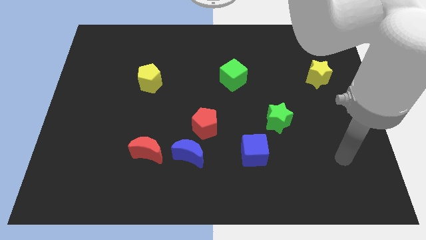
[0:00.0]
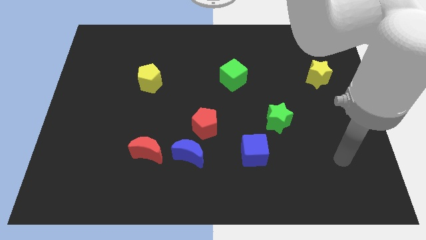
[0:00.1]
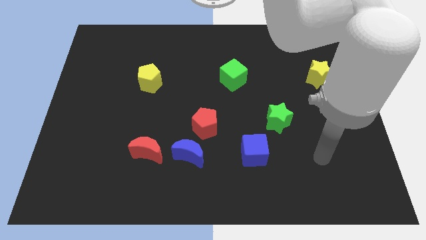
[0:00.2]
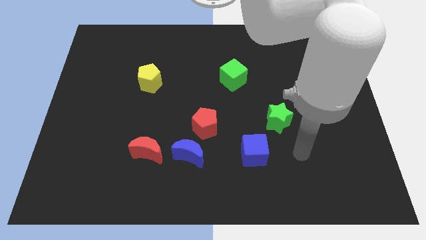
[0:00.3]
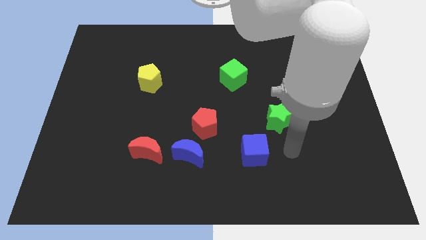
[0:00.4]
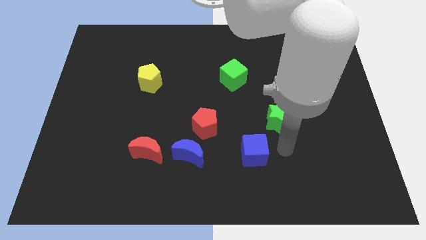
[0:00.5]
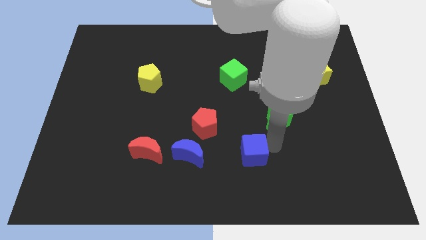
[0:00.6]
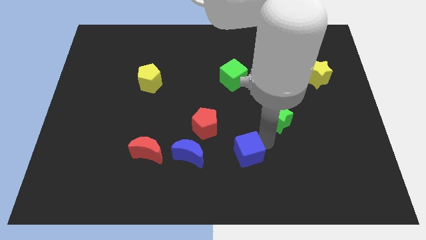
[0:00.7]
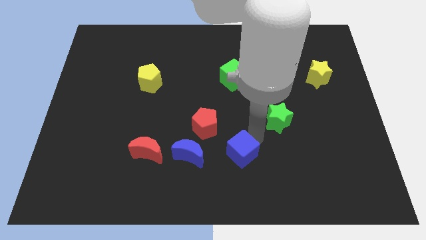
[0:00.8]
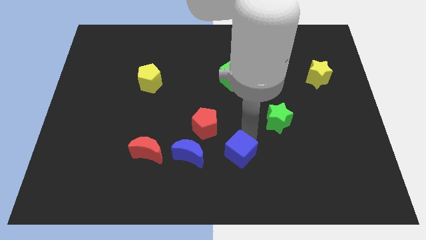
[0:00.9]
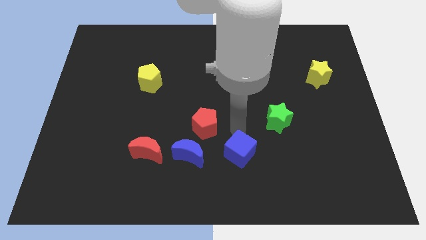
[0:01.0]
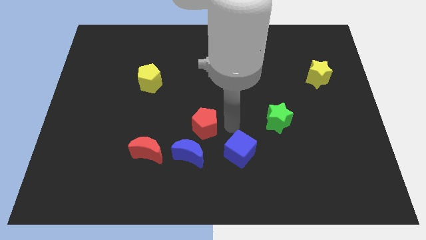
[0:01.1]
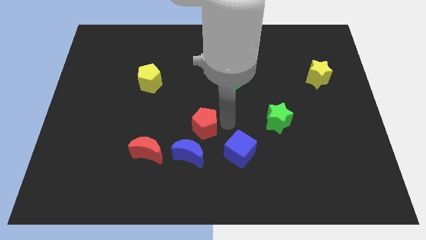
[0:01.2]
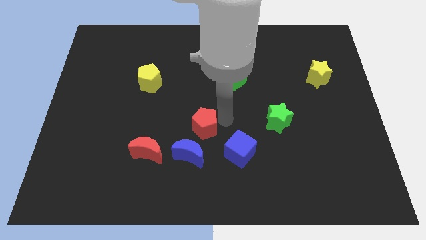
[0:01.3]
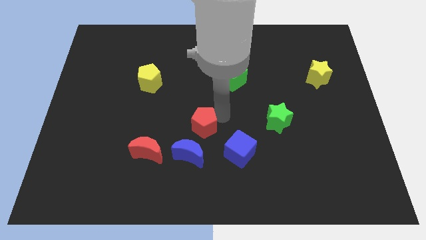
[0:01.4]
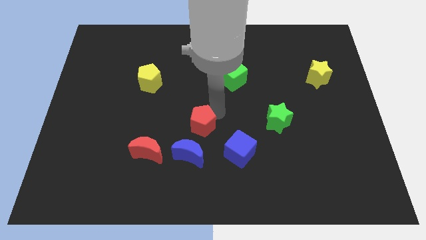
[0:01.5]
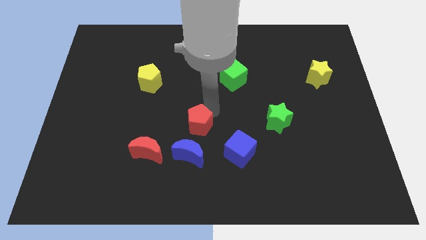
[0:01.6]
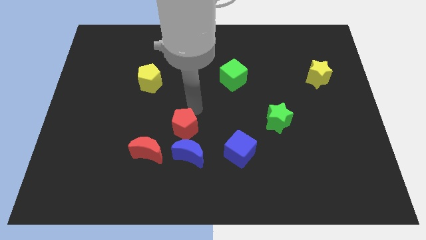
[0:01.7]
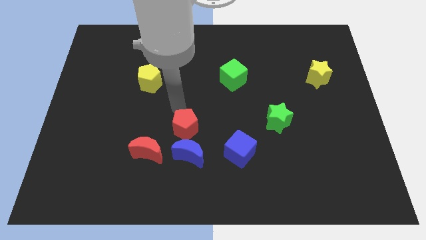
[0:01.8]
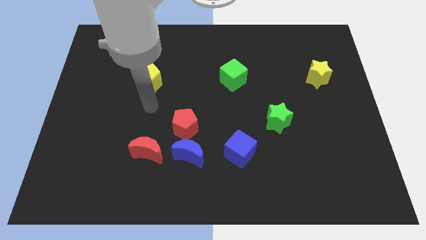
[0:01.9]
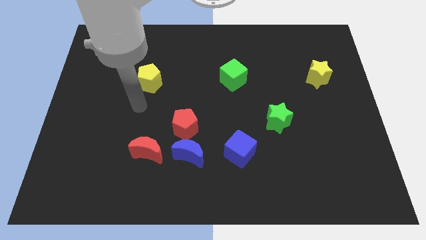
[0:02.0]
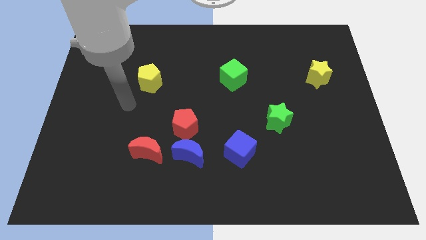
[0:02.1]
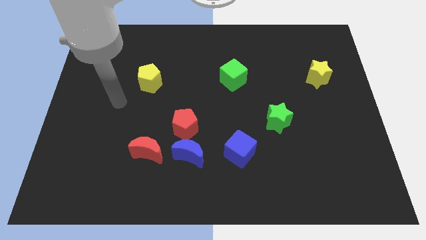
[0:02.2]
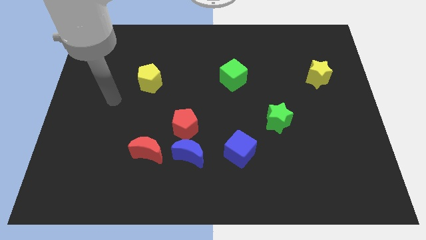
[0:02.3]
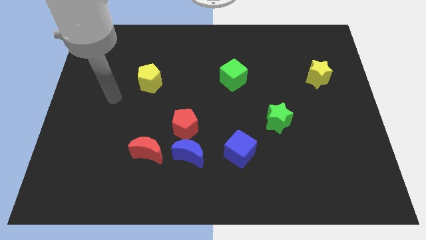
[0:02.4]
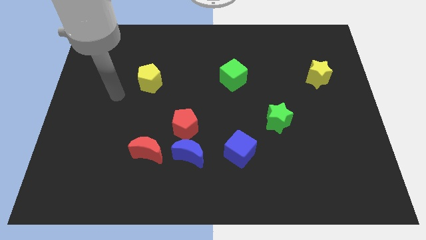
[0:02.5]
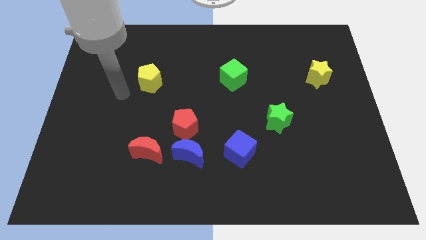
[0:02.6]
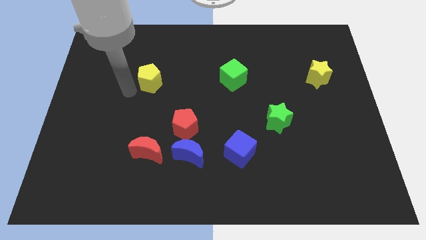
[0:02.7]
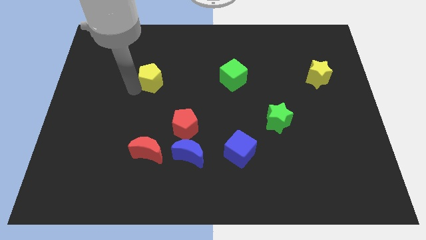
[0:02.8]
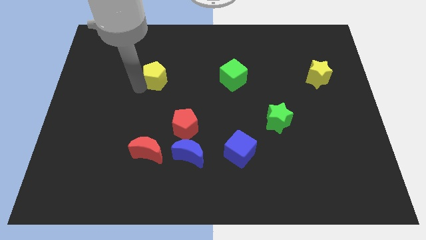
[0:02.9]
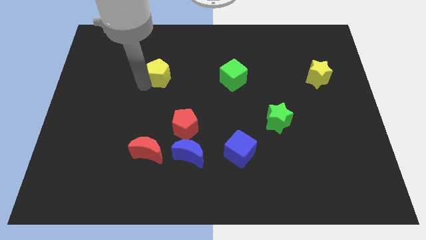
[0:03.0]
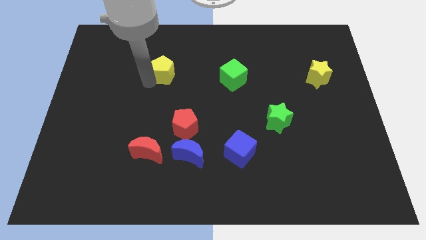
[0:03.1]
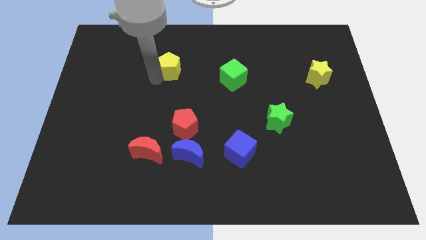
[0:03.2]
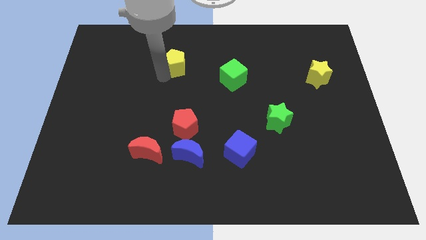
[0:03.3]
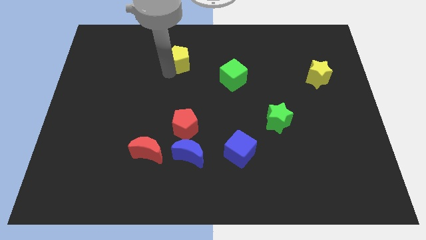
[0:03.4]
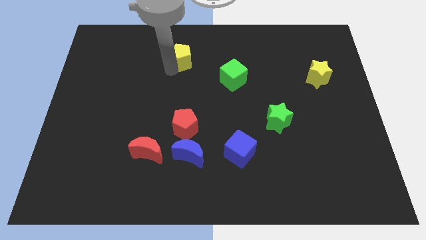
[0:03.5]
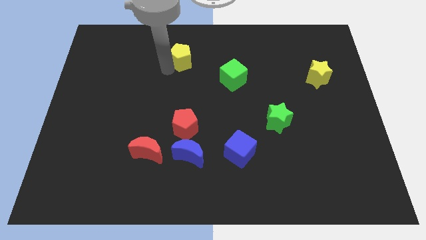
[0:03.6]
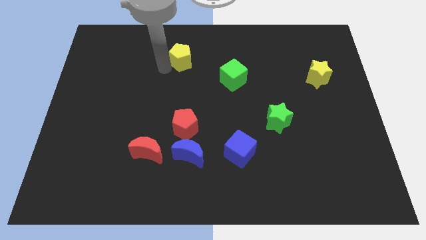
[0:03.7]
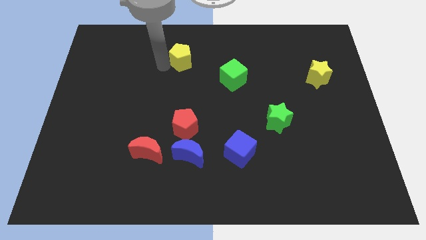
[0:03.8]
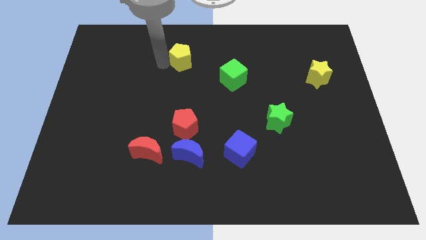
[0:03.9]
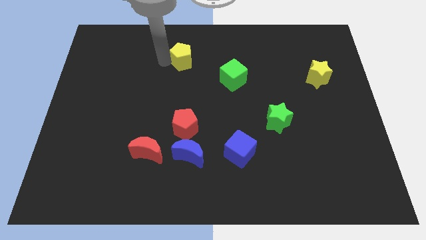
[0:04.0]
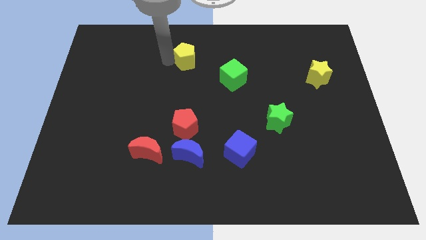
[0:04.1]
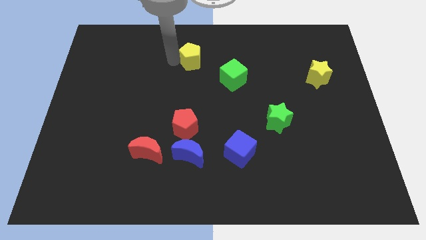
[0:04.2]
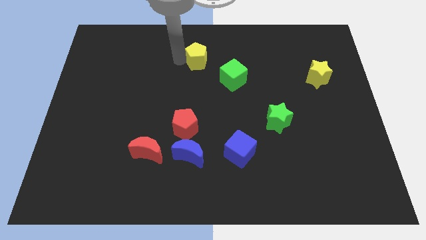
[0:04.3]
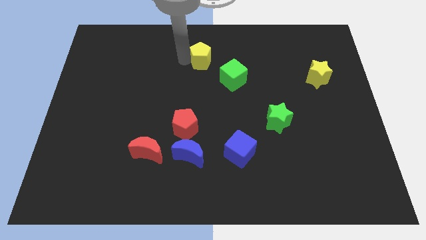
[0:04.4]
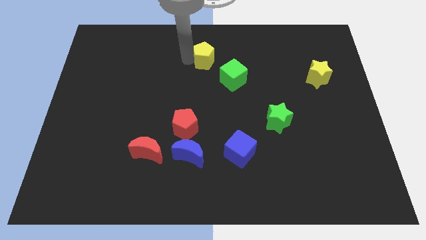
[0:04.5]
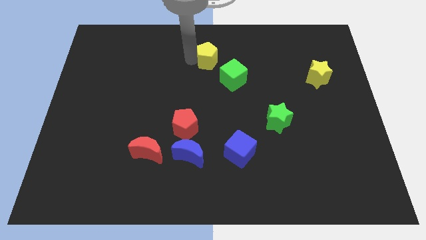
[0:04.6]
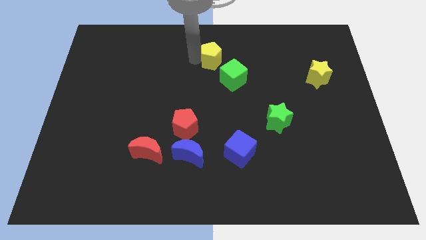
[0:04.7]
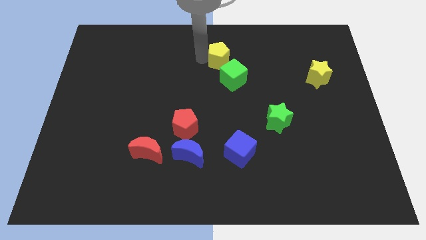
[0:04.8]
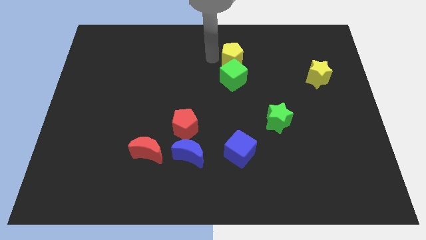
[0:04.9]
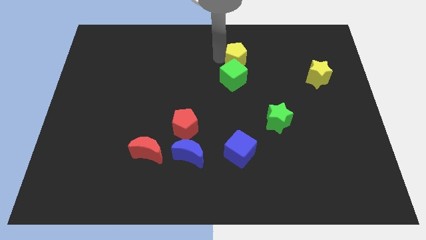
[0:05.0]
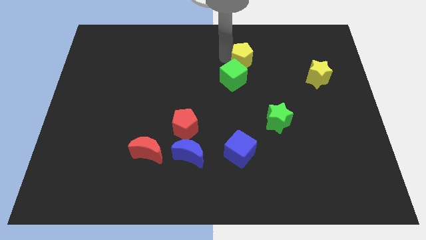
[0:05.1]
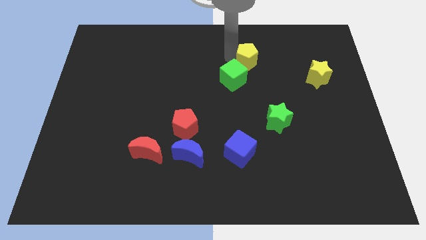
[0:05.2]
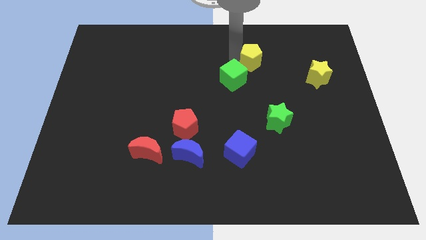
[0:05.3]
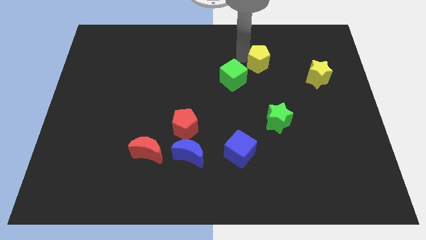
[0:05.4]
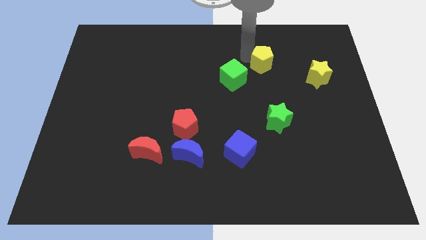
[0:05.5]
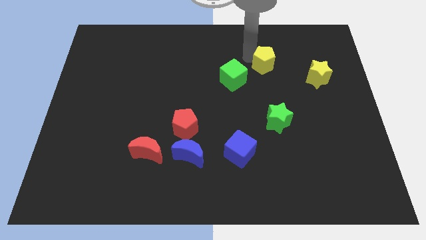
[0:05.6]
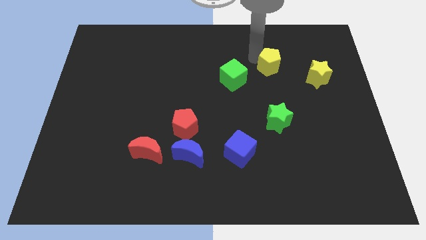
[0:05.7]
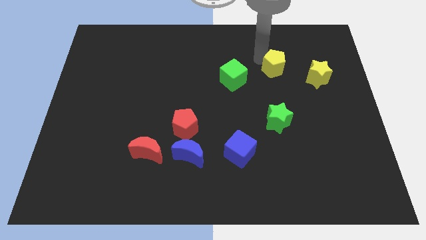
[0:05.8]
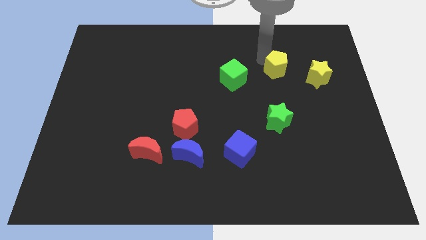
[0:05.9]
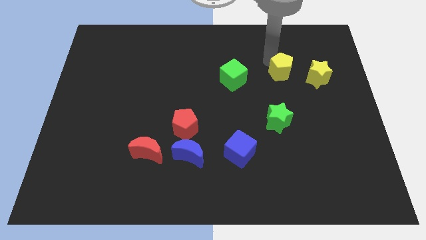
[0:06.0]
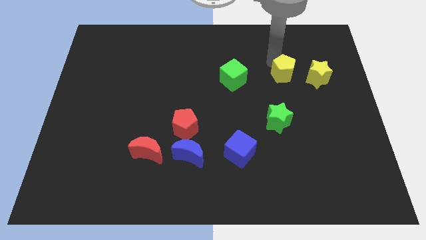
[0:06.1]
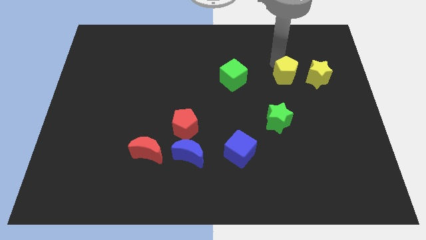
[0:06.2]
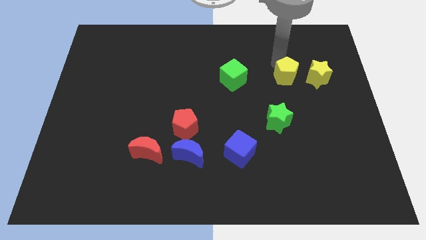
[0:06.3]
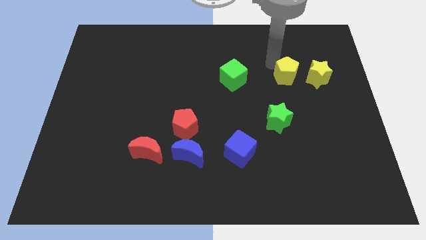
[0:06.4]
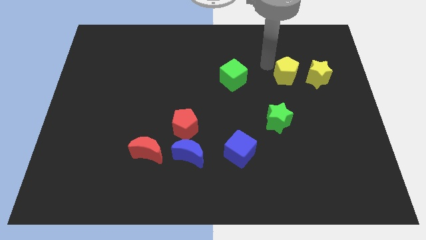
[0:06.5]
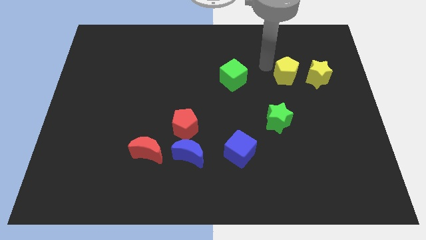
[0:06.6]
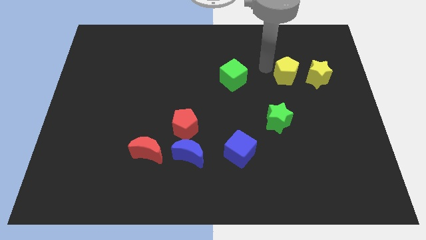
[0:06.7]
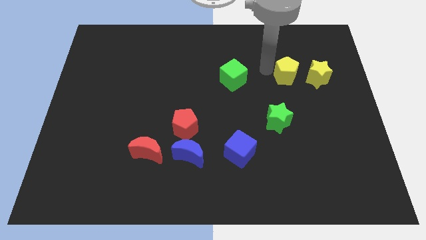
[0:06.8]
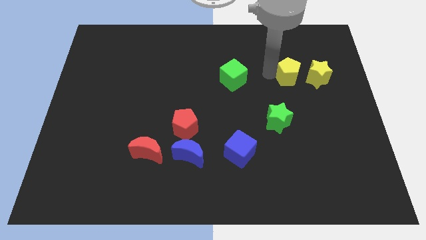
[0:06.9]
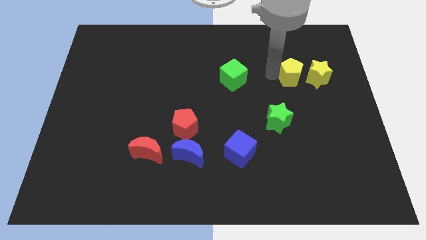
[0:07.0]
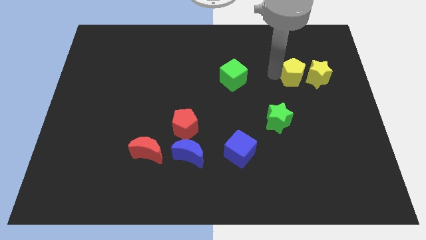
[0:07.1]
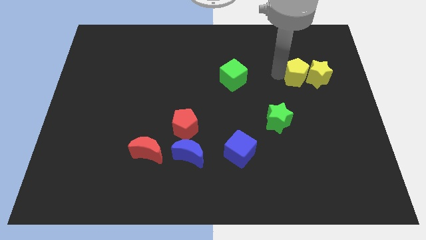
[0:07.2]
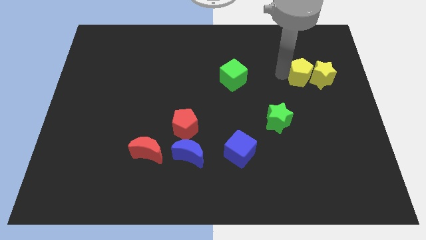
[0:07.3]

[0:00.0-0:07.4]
put the yellow pentagon towards the yellow star

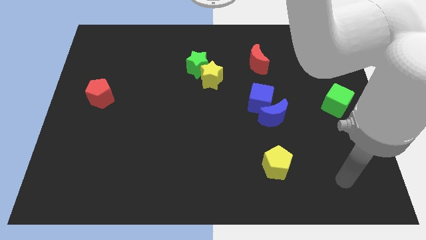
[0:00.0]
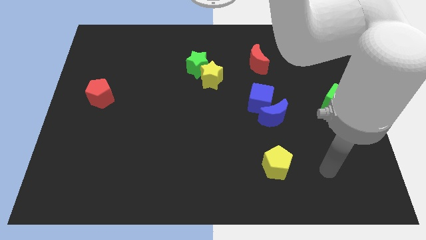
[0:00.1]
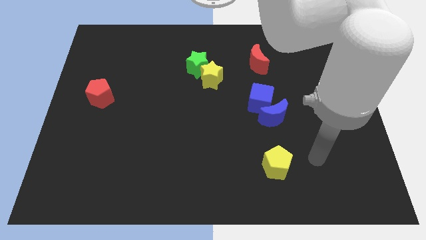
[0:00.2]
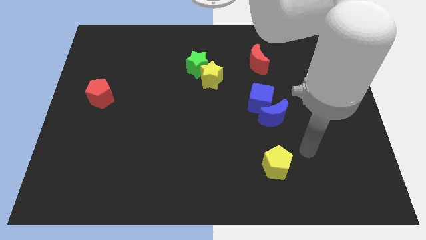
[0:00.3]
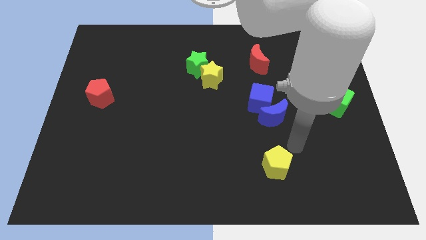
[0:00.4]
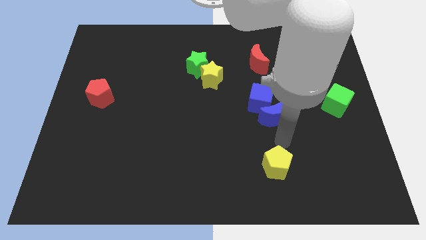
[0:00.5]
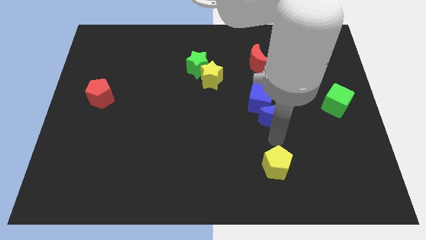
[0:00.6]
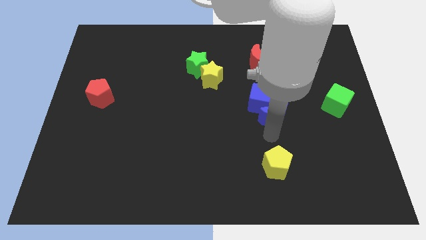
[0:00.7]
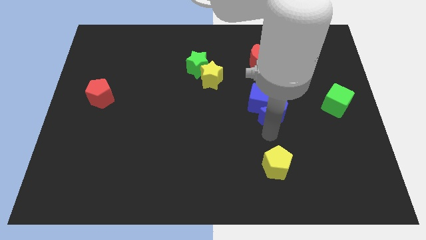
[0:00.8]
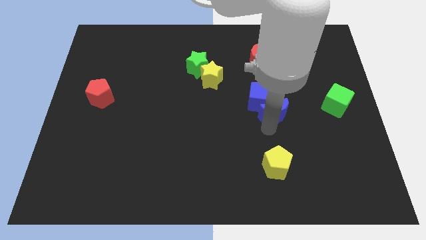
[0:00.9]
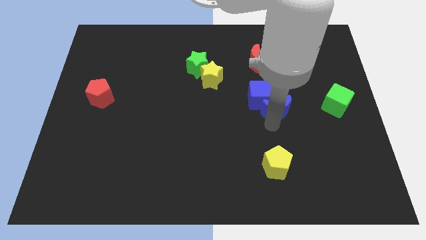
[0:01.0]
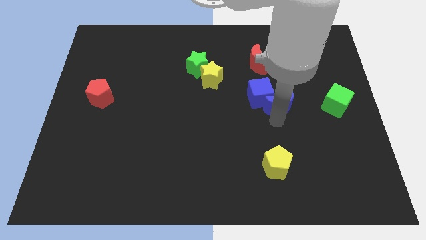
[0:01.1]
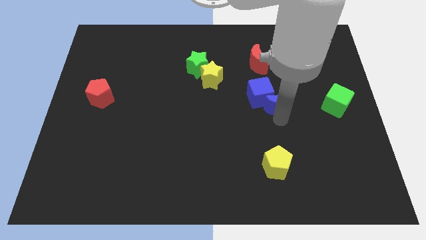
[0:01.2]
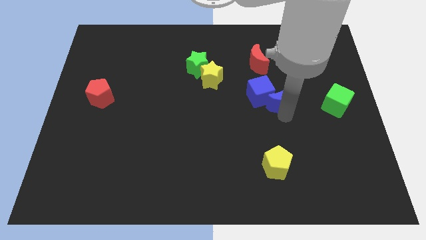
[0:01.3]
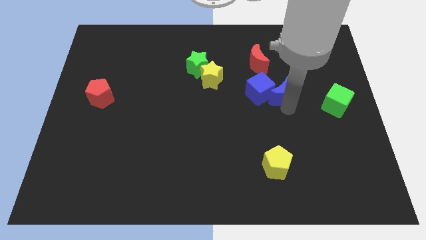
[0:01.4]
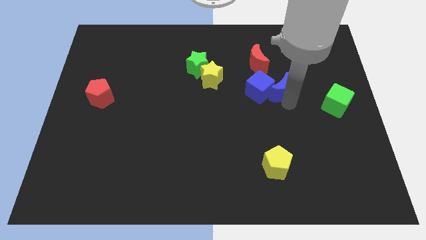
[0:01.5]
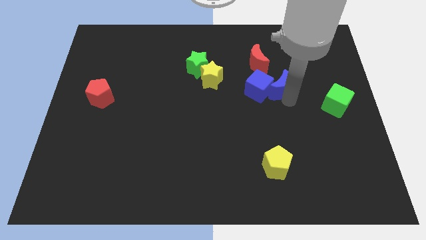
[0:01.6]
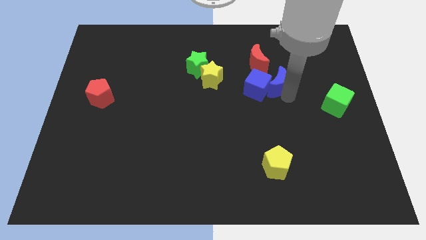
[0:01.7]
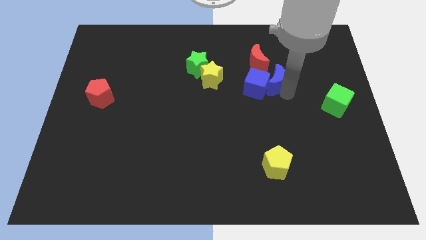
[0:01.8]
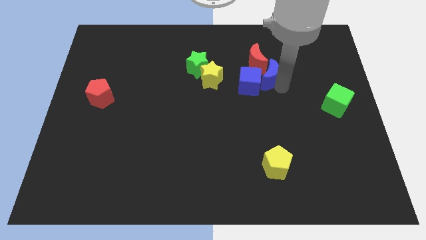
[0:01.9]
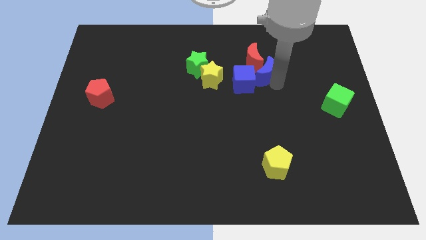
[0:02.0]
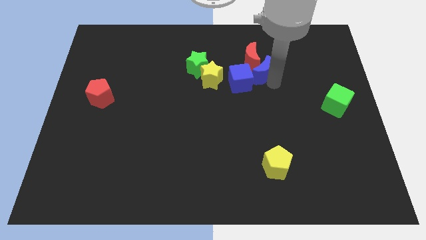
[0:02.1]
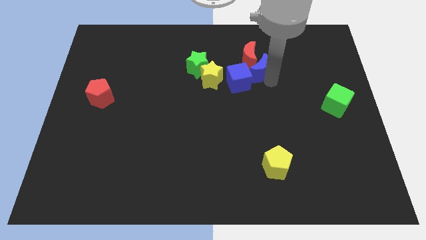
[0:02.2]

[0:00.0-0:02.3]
slide the blue moon next to the red moon
